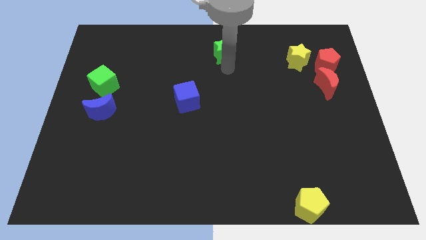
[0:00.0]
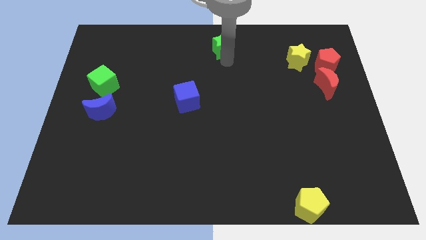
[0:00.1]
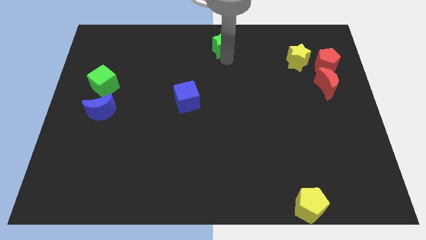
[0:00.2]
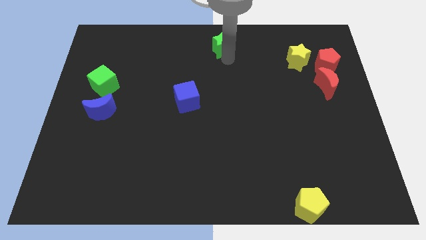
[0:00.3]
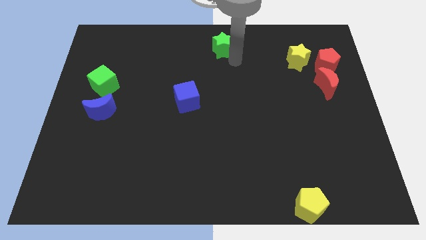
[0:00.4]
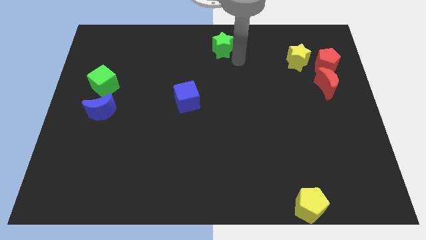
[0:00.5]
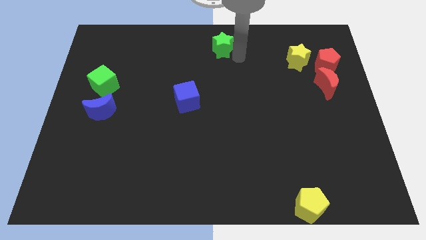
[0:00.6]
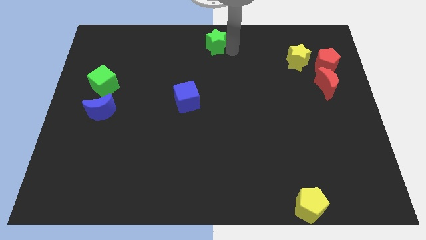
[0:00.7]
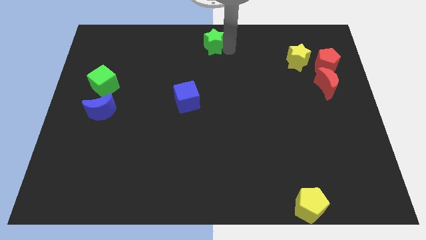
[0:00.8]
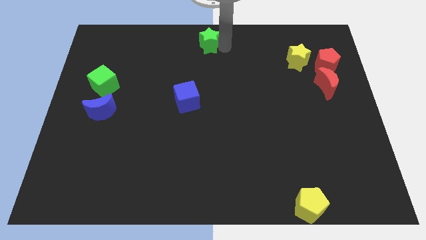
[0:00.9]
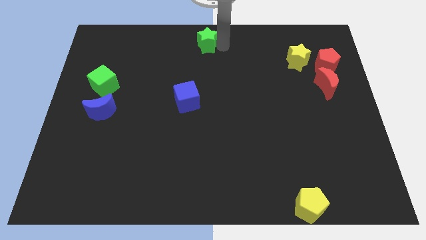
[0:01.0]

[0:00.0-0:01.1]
move the green star to the top center

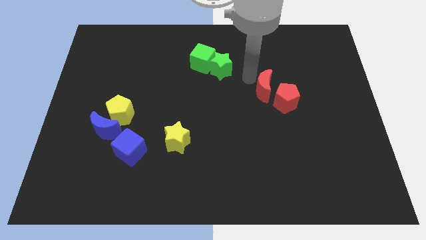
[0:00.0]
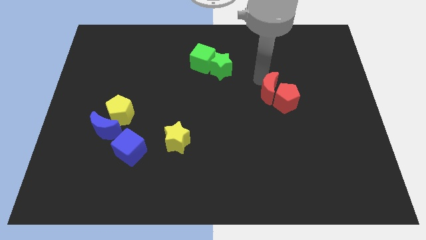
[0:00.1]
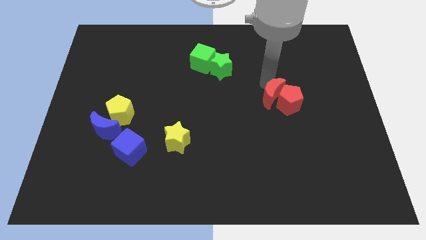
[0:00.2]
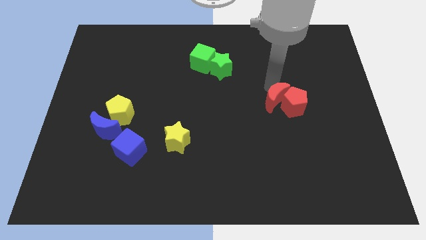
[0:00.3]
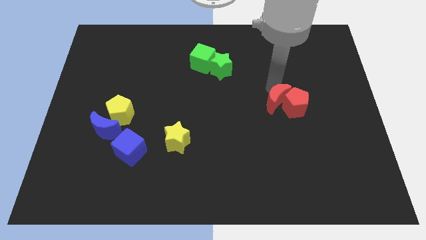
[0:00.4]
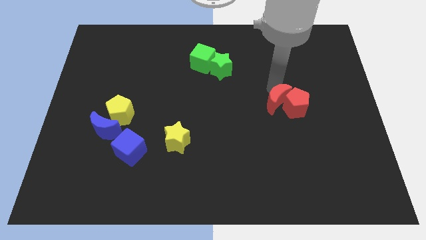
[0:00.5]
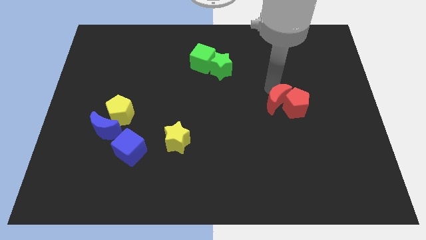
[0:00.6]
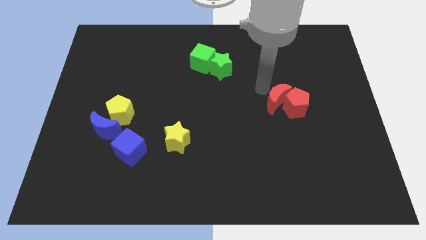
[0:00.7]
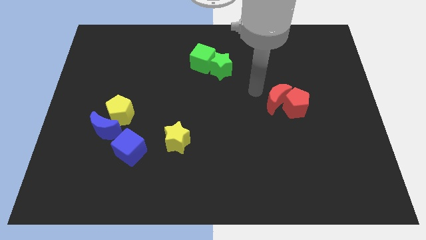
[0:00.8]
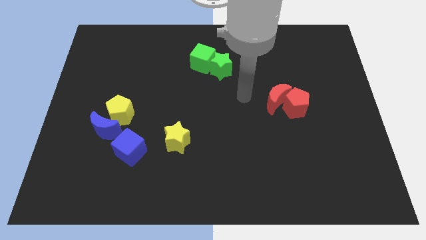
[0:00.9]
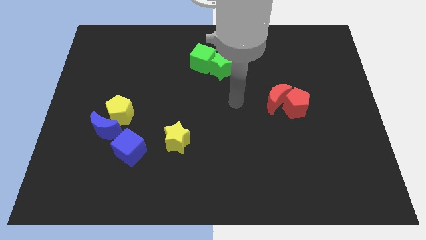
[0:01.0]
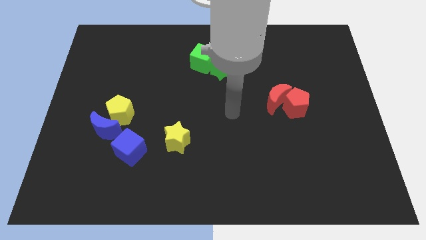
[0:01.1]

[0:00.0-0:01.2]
push red crescent in to red pentagon

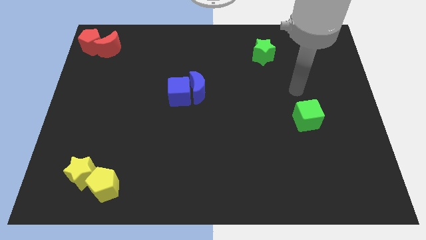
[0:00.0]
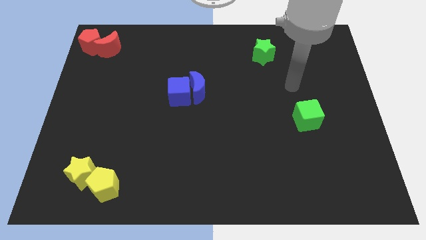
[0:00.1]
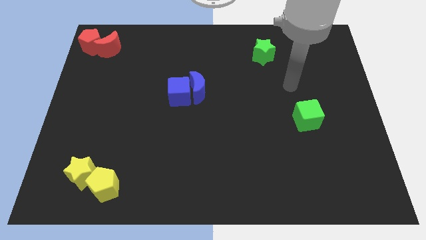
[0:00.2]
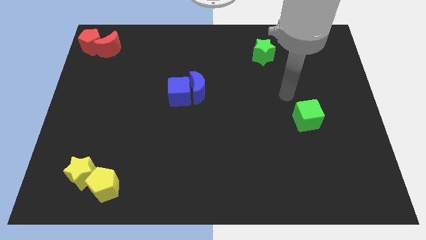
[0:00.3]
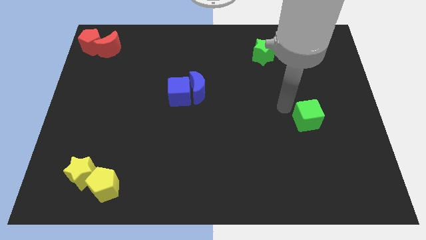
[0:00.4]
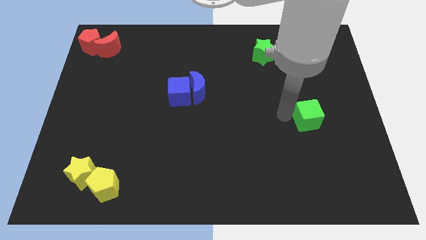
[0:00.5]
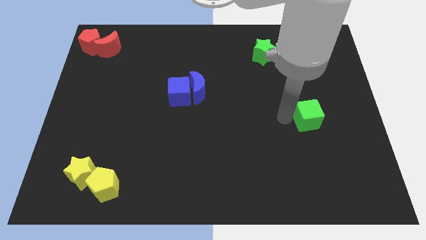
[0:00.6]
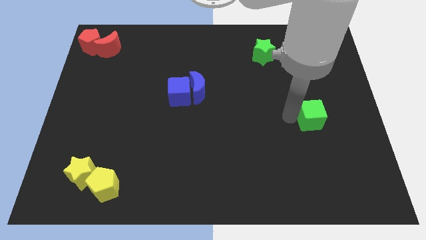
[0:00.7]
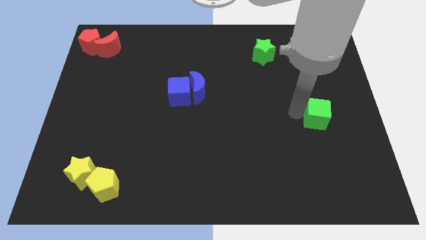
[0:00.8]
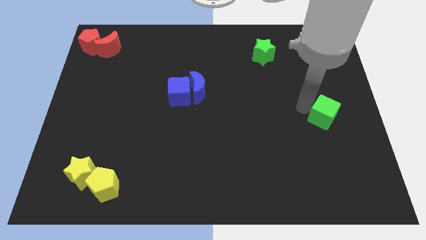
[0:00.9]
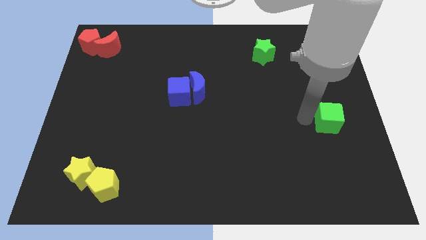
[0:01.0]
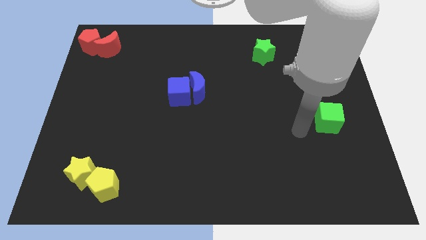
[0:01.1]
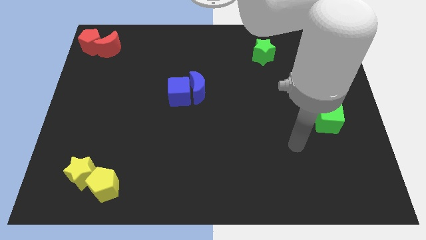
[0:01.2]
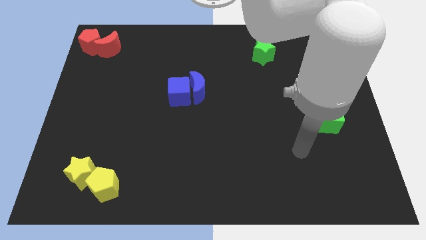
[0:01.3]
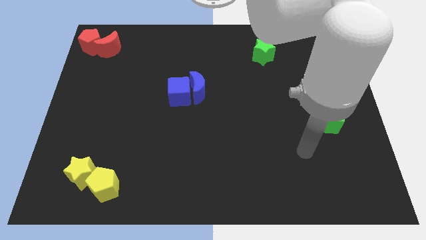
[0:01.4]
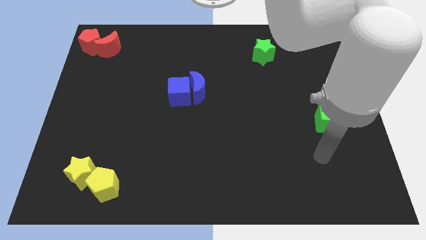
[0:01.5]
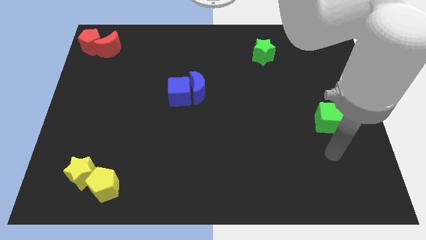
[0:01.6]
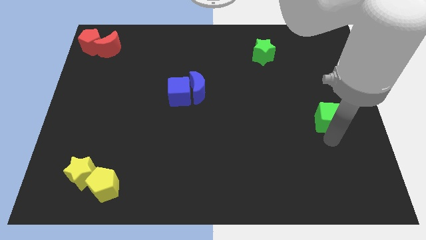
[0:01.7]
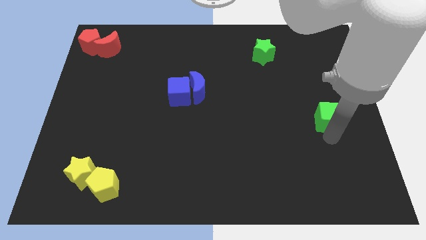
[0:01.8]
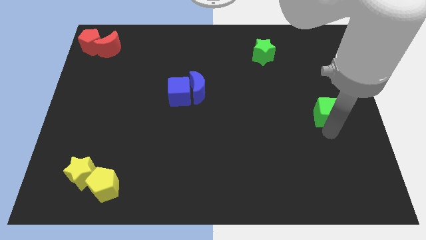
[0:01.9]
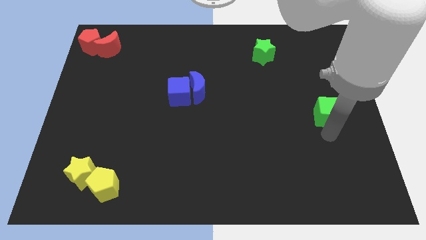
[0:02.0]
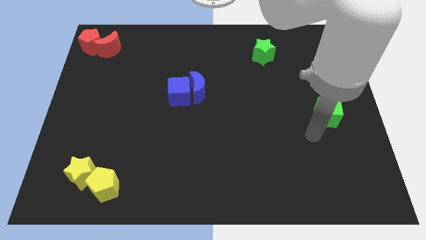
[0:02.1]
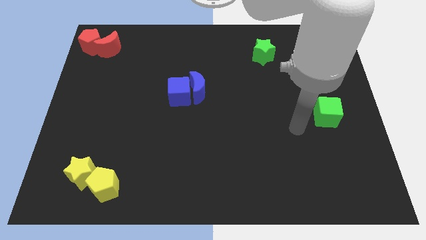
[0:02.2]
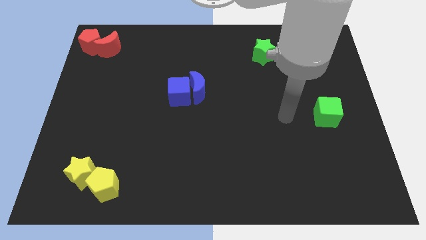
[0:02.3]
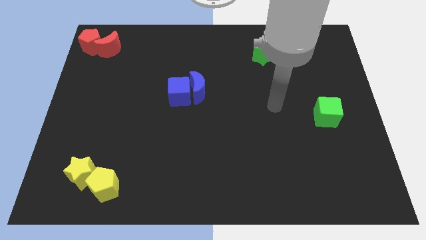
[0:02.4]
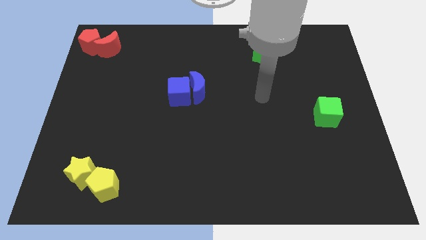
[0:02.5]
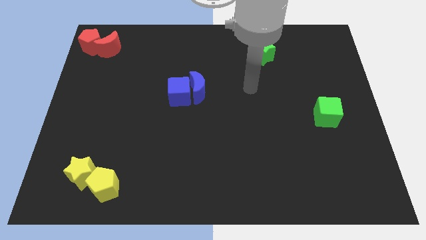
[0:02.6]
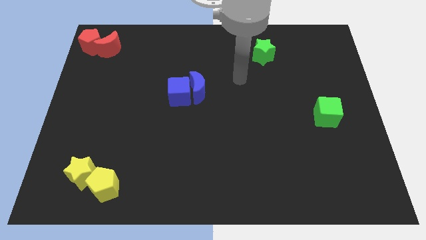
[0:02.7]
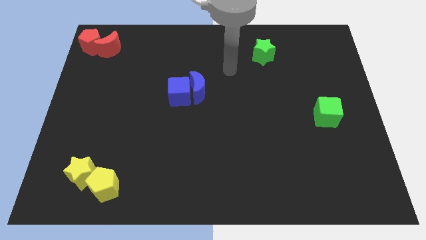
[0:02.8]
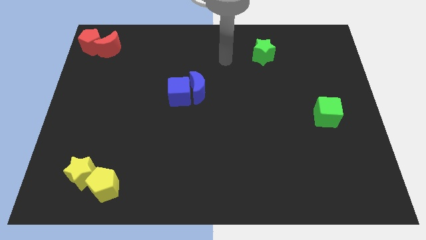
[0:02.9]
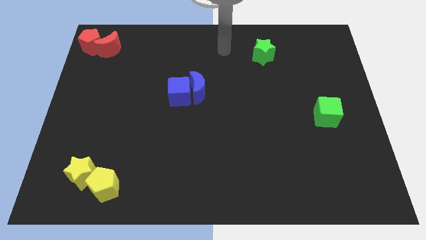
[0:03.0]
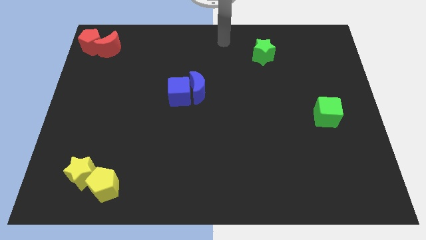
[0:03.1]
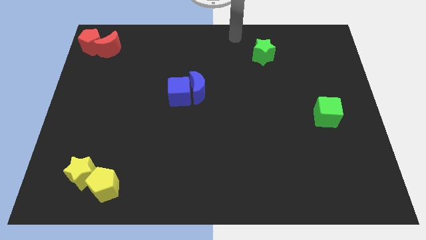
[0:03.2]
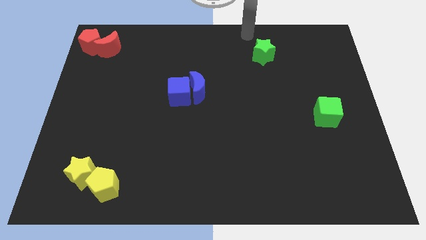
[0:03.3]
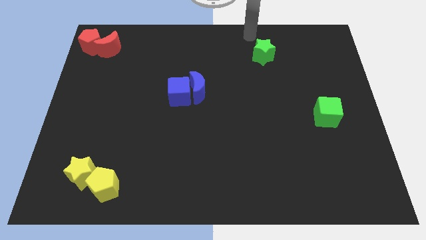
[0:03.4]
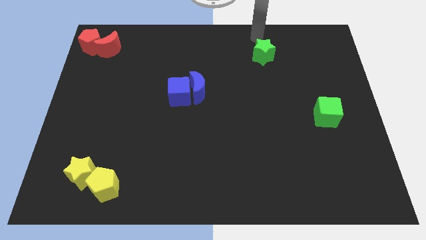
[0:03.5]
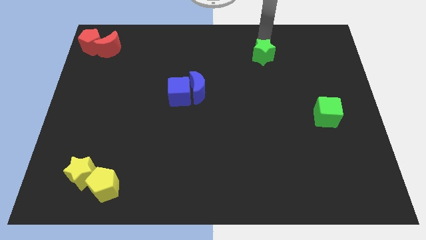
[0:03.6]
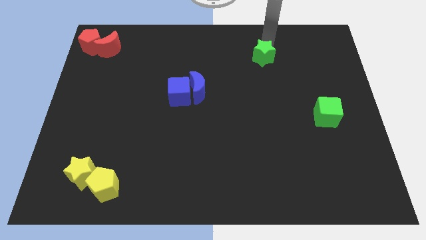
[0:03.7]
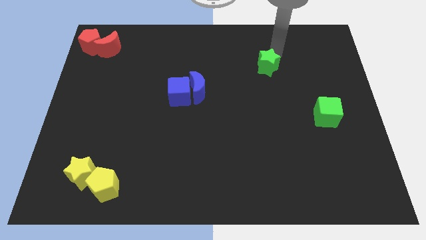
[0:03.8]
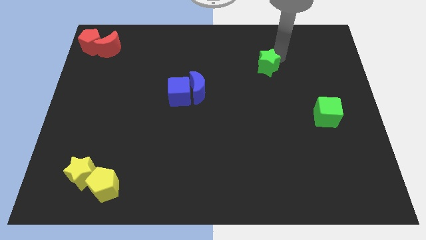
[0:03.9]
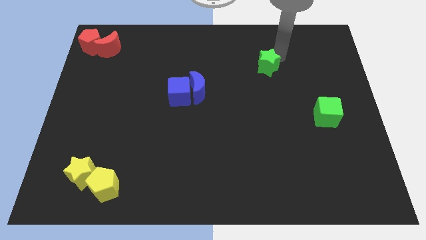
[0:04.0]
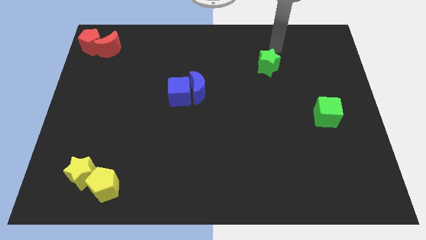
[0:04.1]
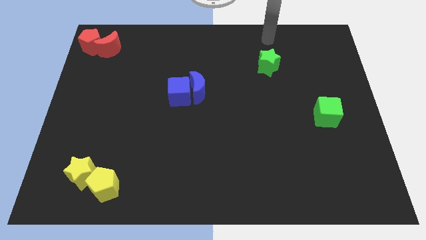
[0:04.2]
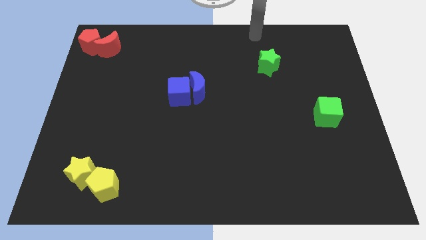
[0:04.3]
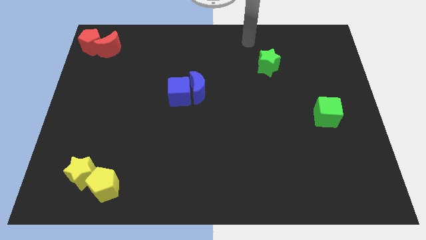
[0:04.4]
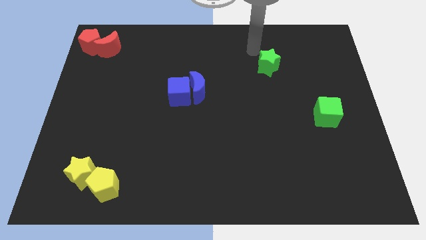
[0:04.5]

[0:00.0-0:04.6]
push green block centre right of the board

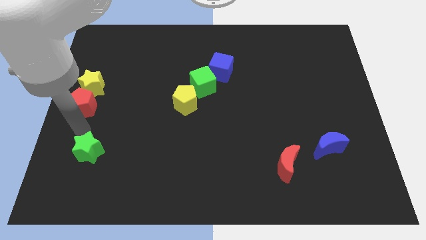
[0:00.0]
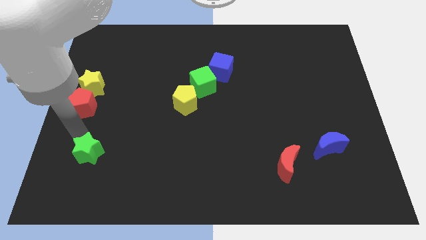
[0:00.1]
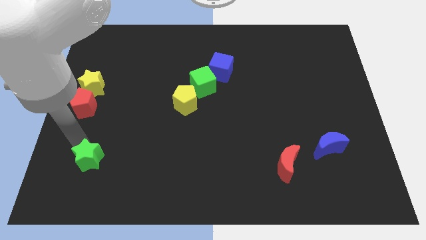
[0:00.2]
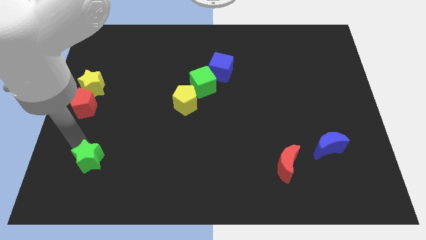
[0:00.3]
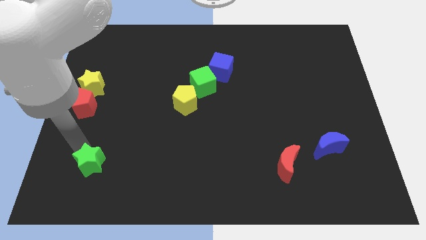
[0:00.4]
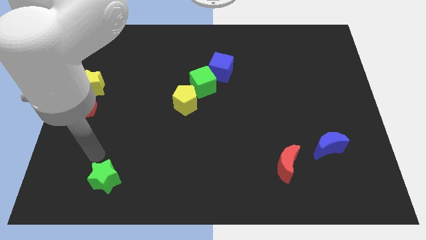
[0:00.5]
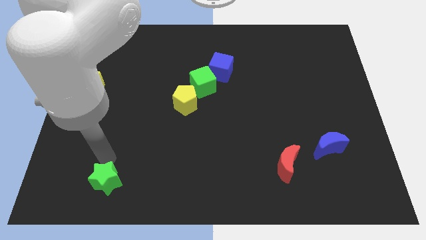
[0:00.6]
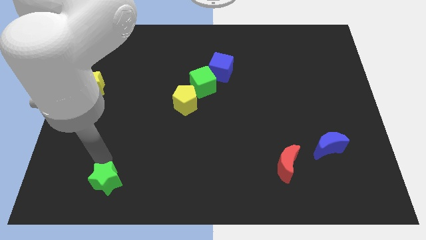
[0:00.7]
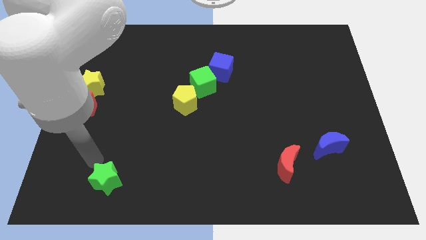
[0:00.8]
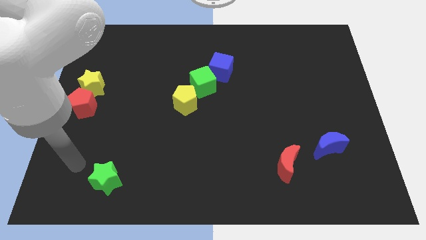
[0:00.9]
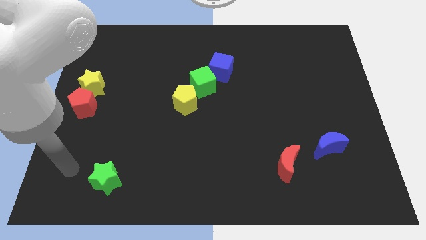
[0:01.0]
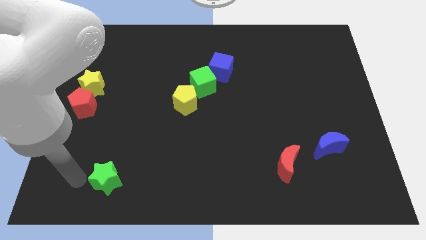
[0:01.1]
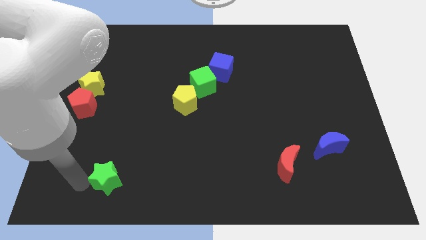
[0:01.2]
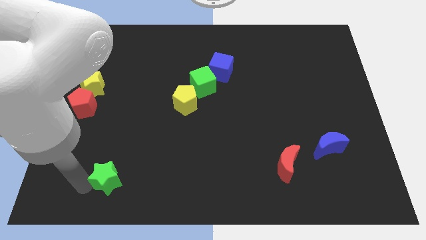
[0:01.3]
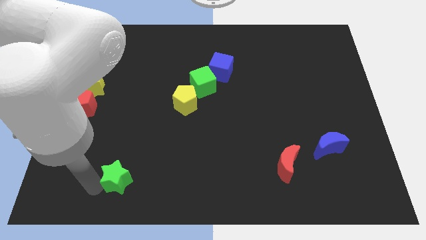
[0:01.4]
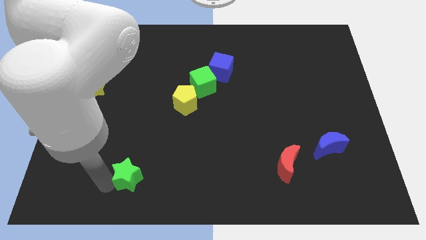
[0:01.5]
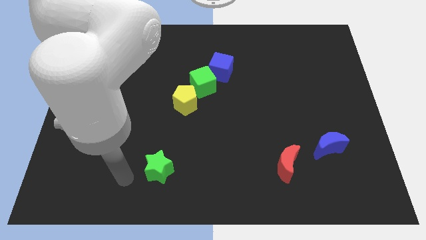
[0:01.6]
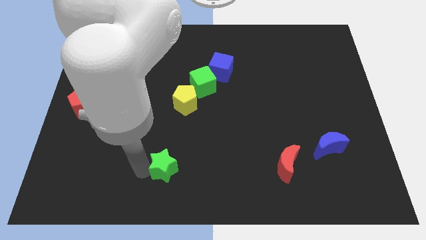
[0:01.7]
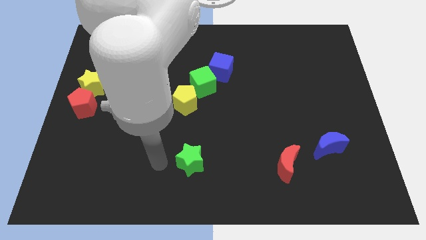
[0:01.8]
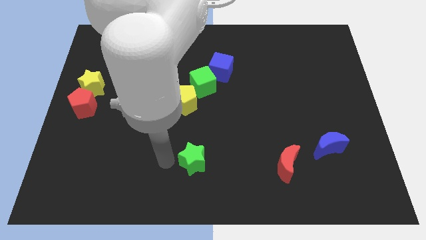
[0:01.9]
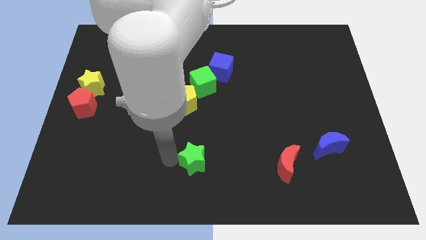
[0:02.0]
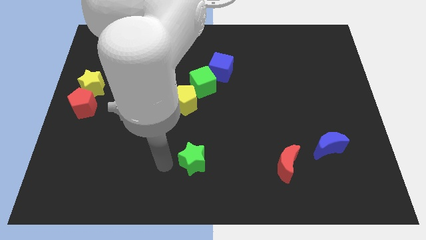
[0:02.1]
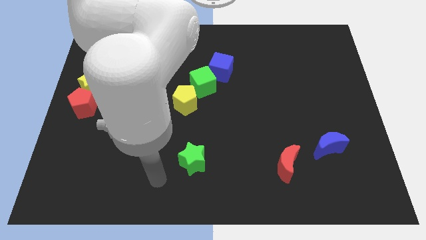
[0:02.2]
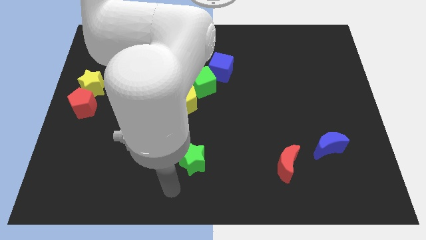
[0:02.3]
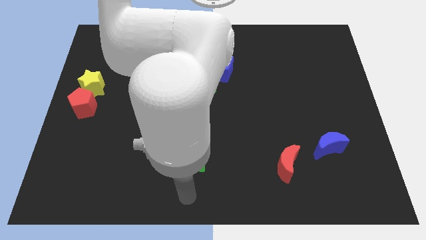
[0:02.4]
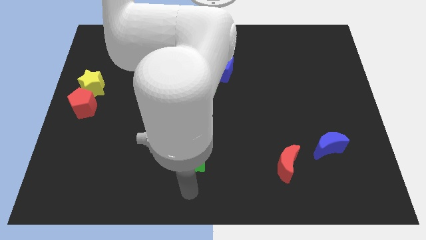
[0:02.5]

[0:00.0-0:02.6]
place green star vertically below yellow pentagon
